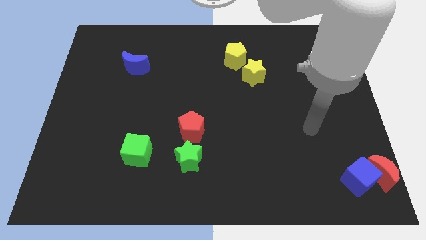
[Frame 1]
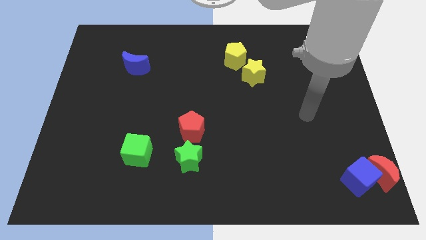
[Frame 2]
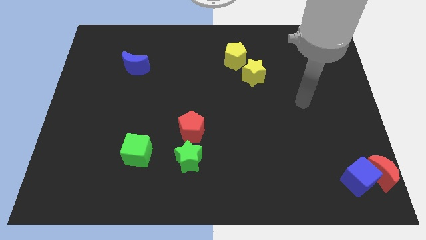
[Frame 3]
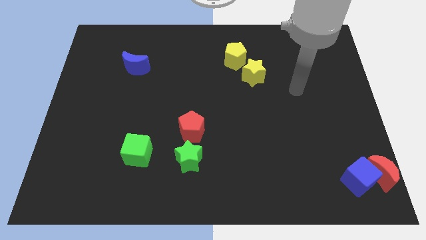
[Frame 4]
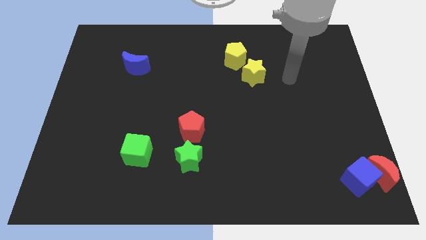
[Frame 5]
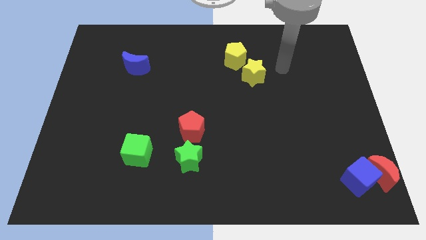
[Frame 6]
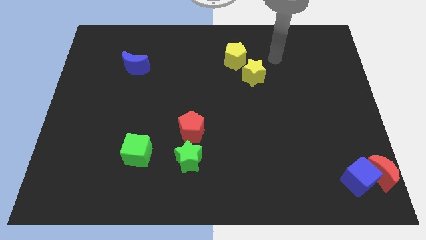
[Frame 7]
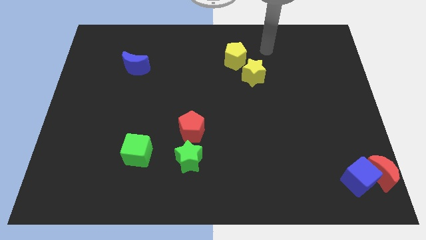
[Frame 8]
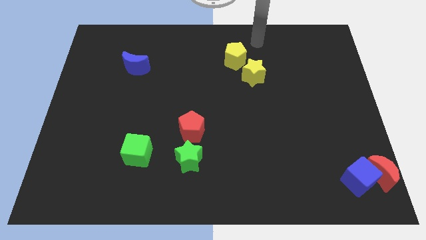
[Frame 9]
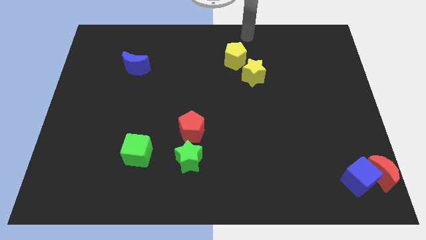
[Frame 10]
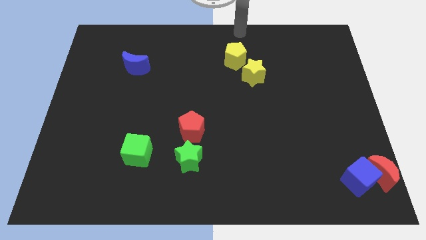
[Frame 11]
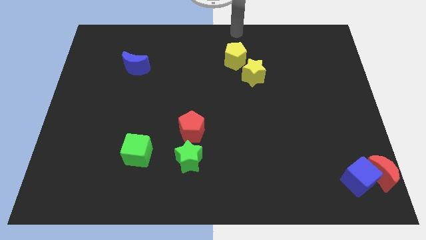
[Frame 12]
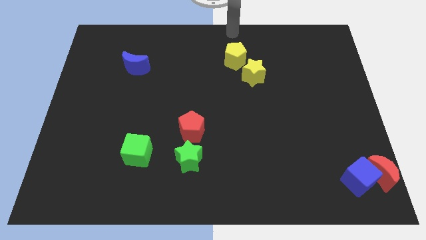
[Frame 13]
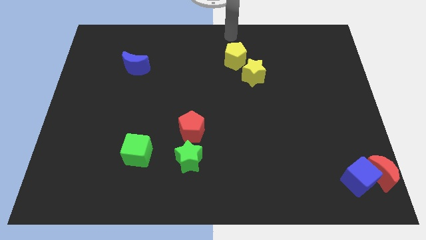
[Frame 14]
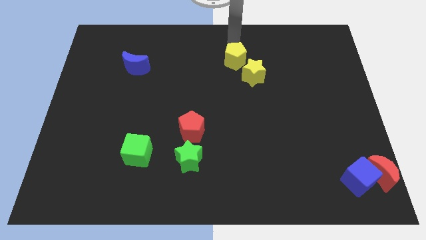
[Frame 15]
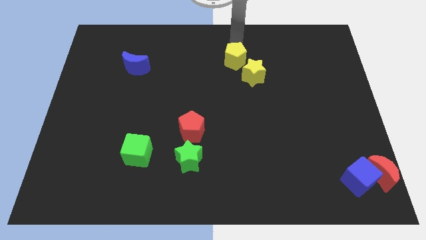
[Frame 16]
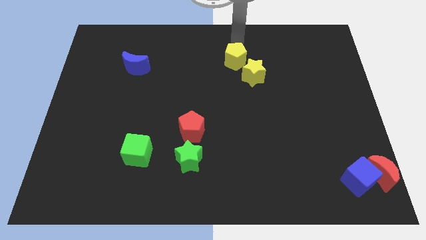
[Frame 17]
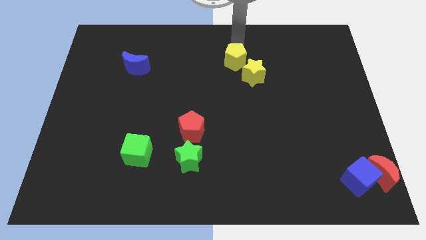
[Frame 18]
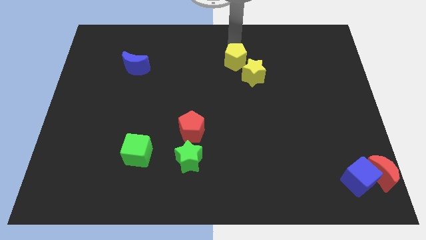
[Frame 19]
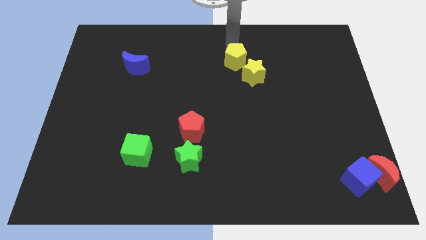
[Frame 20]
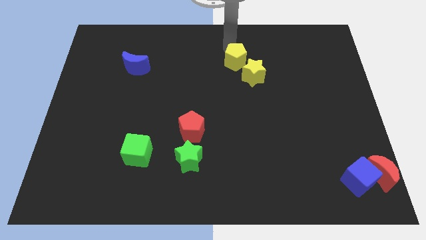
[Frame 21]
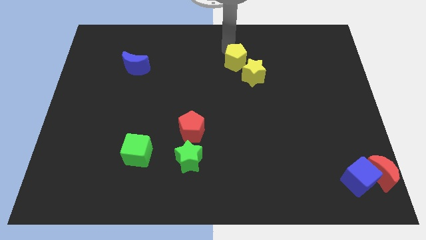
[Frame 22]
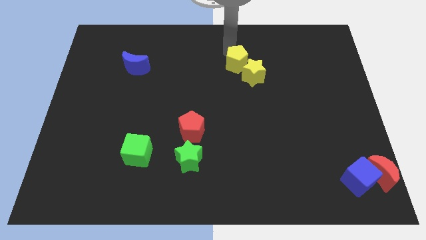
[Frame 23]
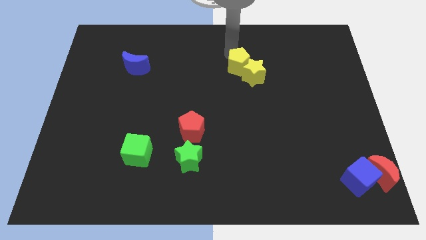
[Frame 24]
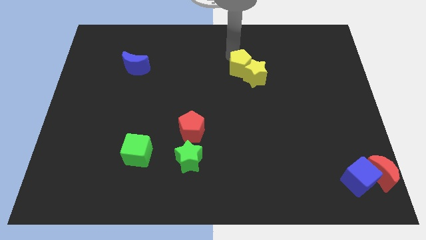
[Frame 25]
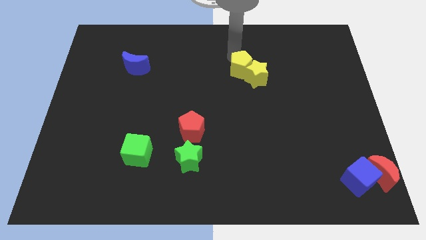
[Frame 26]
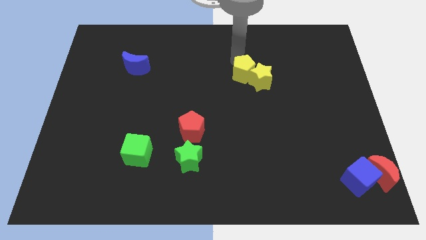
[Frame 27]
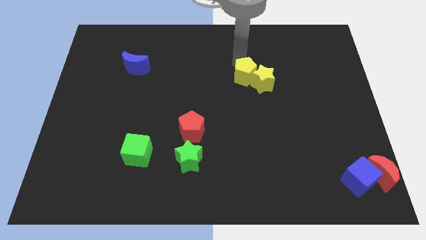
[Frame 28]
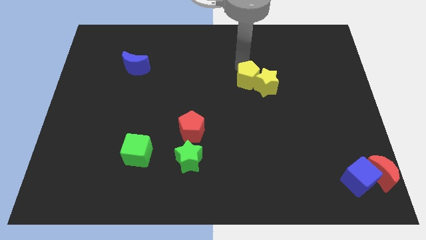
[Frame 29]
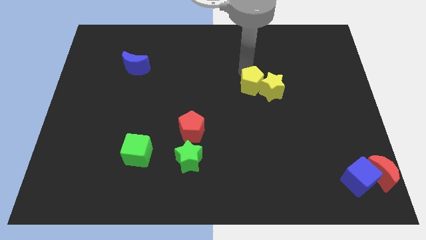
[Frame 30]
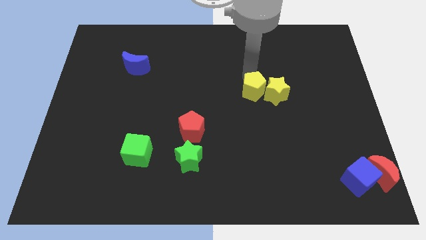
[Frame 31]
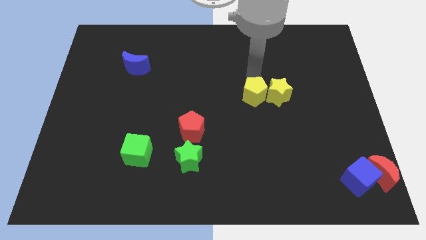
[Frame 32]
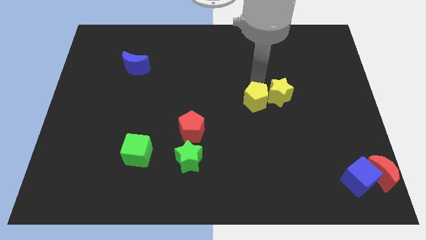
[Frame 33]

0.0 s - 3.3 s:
move both yellow pentagon and yellow star towards down

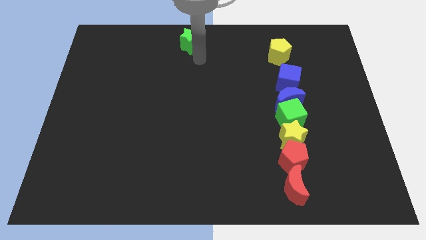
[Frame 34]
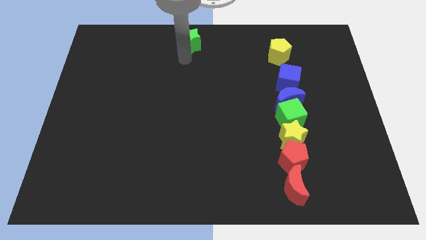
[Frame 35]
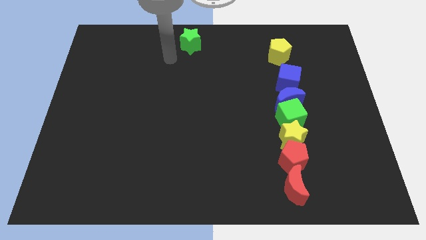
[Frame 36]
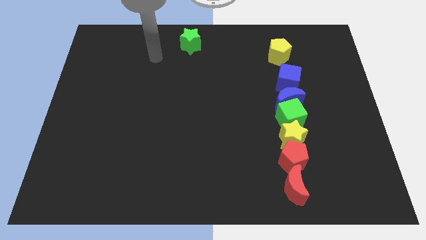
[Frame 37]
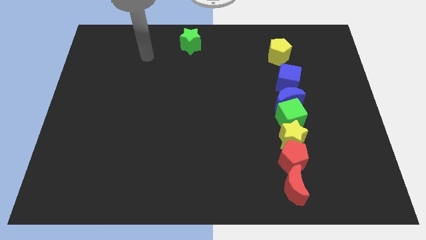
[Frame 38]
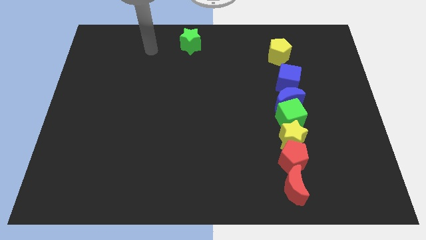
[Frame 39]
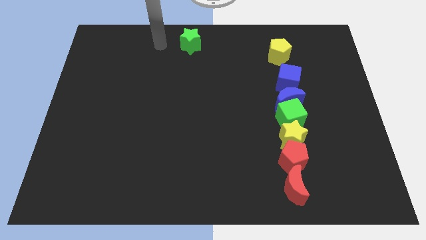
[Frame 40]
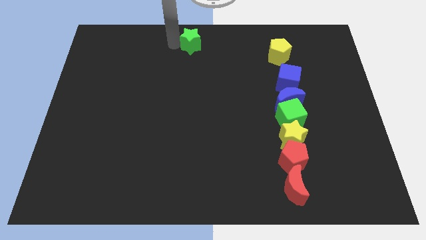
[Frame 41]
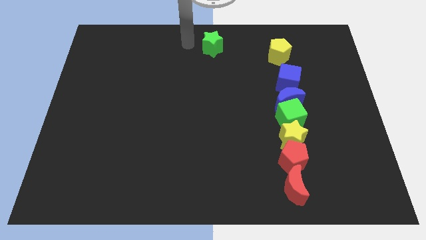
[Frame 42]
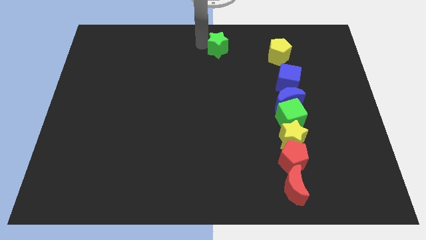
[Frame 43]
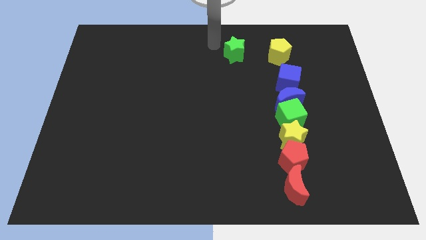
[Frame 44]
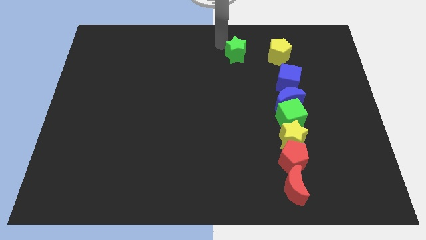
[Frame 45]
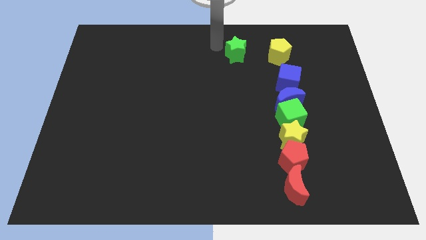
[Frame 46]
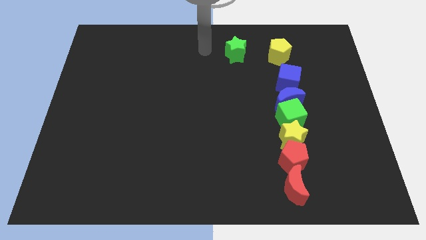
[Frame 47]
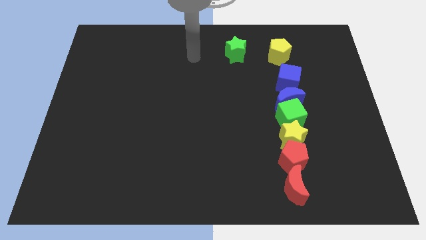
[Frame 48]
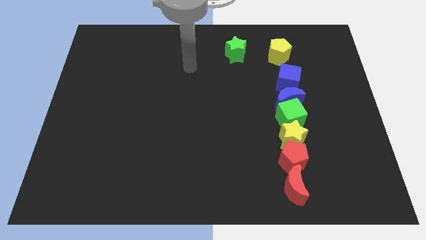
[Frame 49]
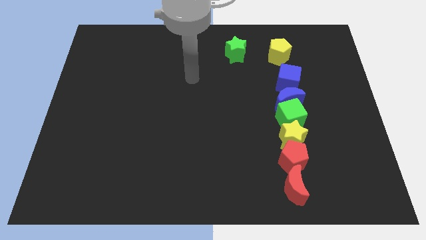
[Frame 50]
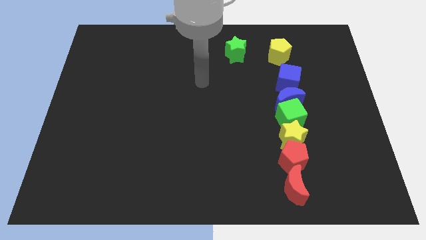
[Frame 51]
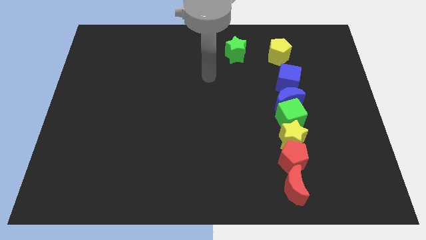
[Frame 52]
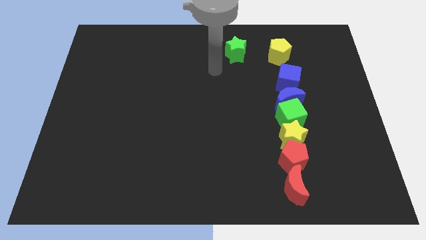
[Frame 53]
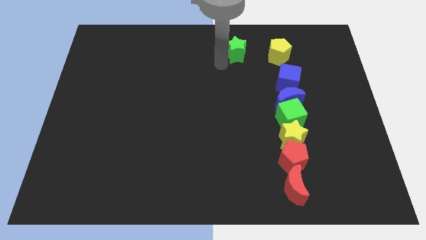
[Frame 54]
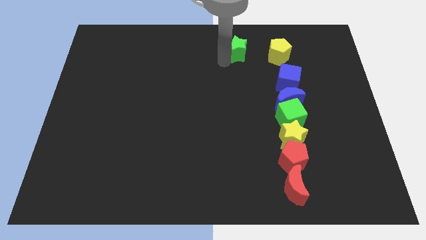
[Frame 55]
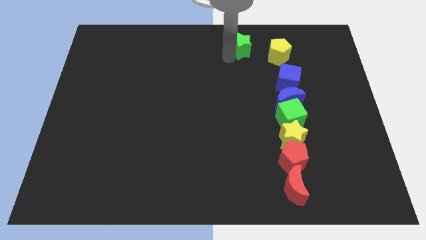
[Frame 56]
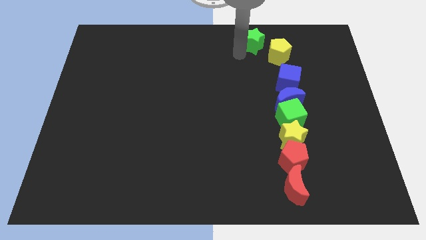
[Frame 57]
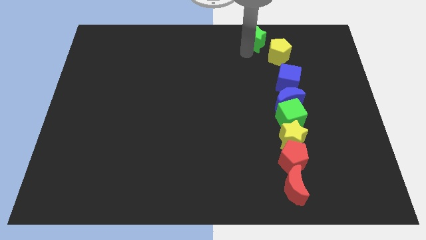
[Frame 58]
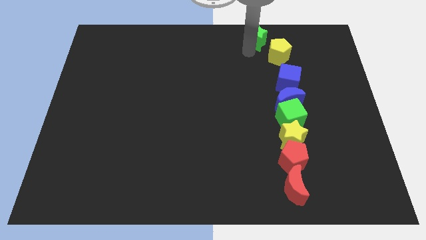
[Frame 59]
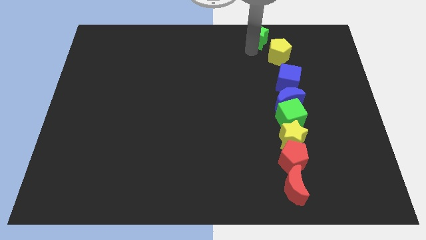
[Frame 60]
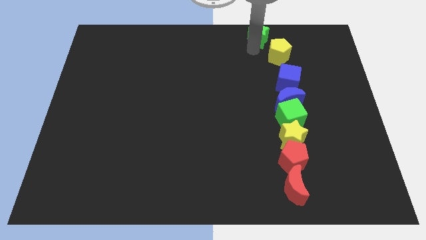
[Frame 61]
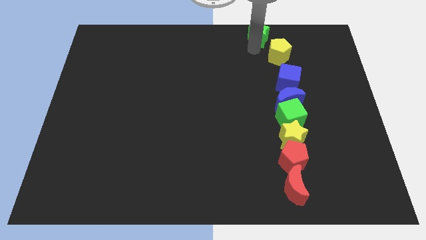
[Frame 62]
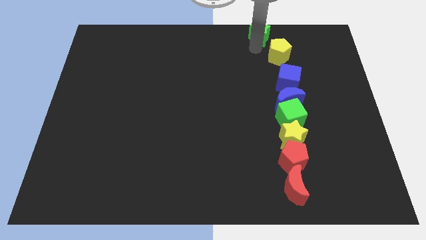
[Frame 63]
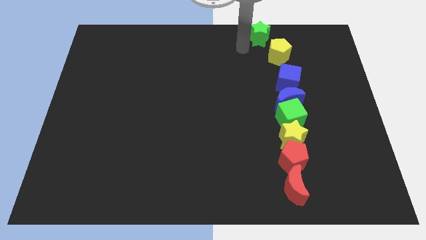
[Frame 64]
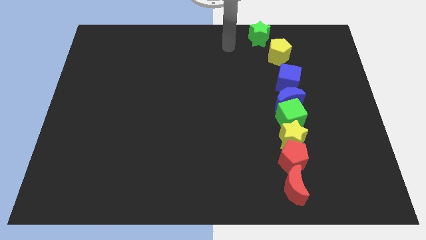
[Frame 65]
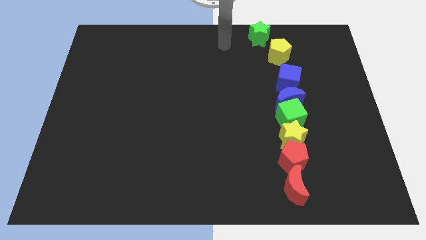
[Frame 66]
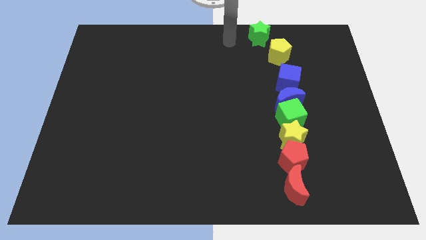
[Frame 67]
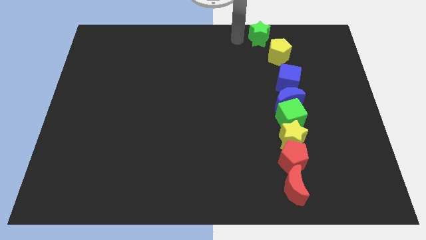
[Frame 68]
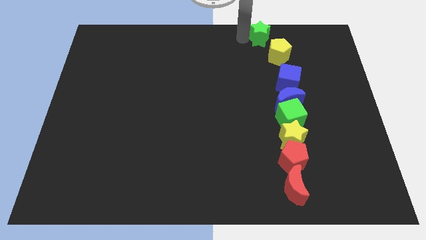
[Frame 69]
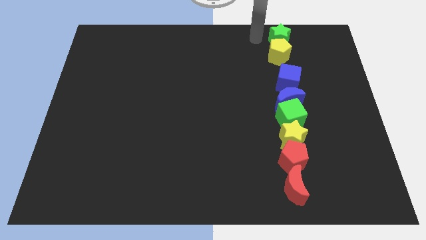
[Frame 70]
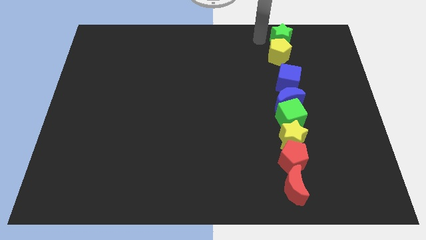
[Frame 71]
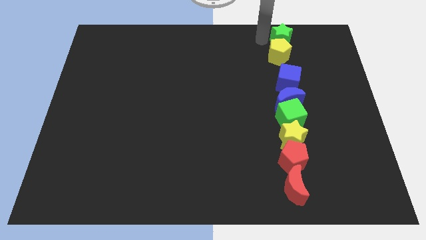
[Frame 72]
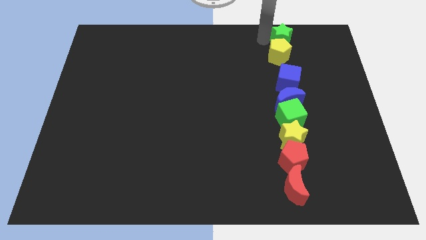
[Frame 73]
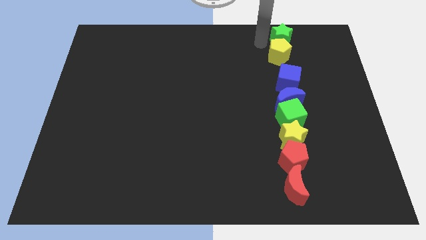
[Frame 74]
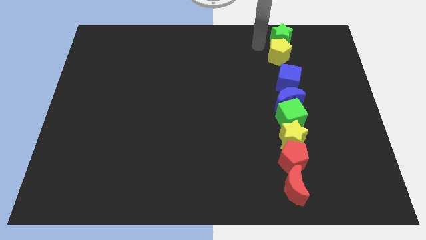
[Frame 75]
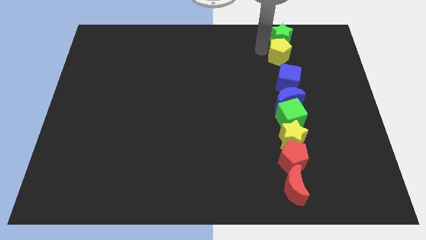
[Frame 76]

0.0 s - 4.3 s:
push the green star at the top of the yellow pentagon

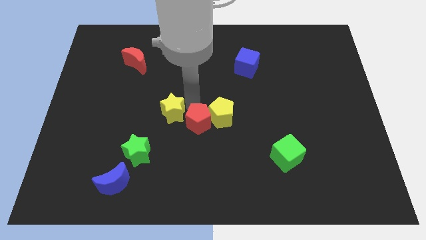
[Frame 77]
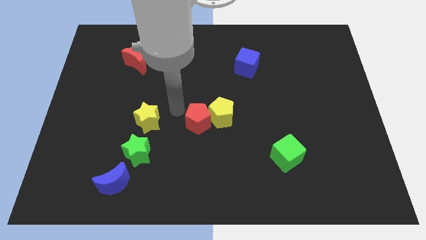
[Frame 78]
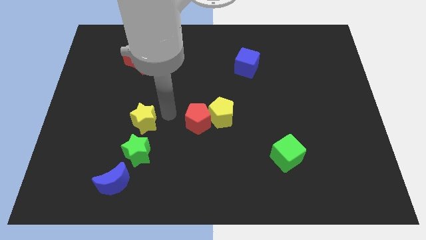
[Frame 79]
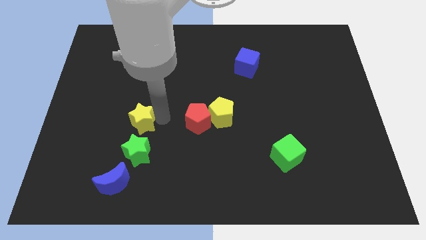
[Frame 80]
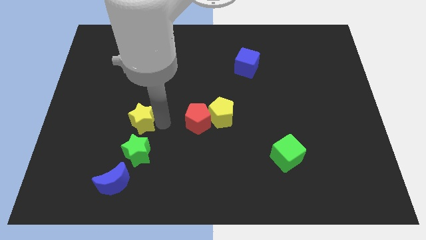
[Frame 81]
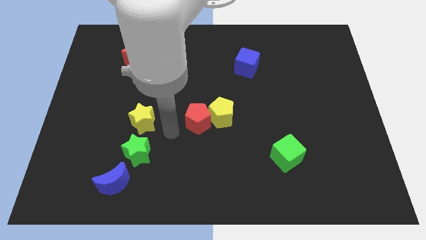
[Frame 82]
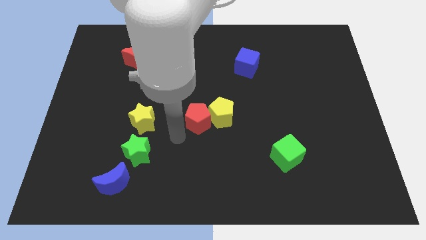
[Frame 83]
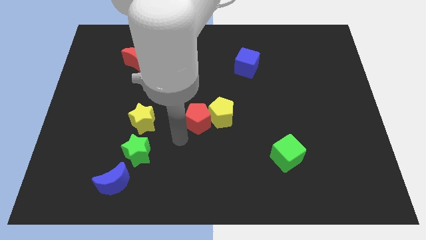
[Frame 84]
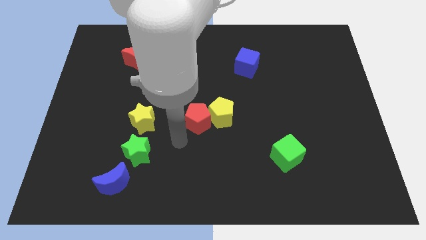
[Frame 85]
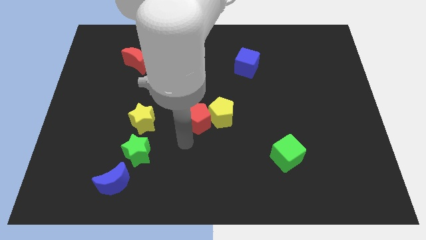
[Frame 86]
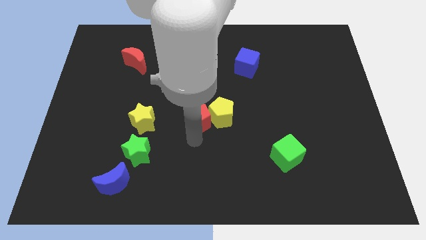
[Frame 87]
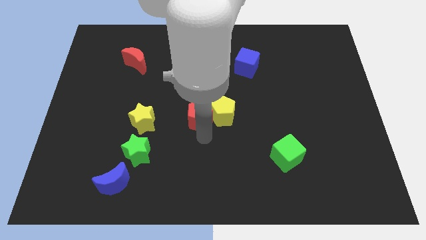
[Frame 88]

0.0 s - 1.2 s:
place the arm down to the red pentagon

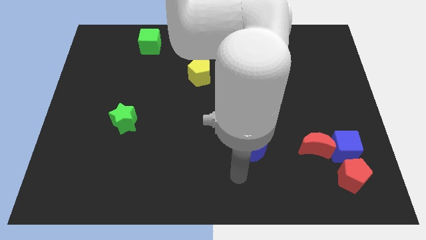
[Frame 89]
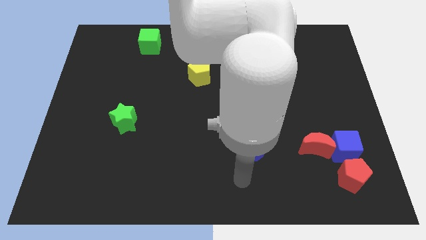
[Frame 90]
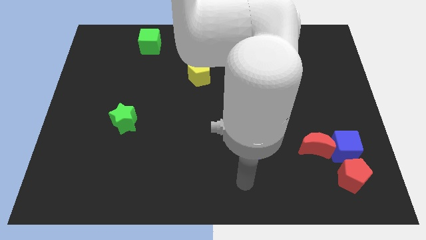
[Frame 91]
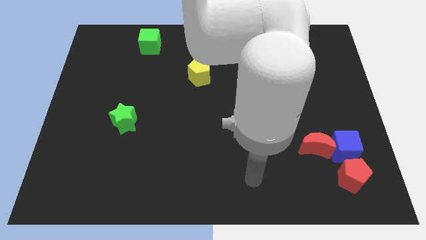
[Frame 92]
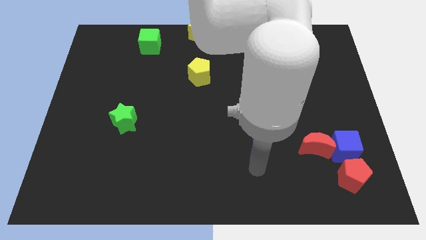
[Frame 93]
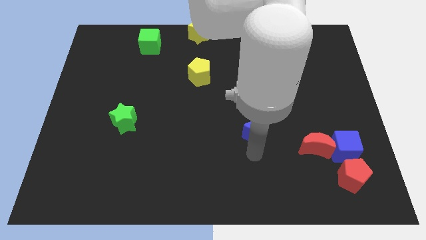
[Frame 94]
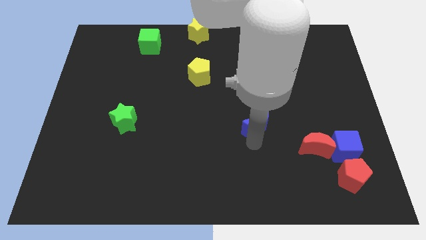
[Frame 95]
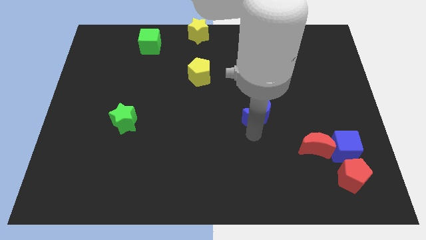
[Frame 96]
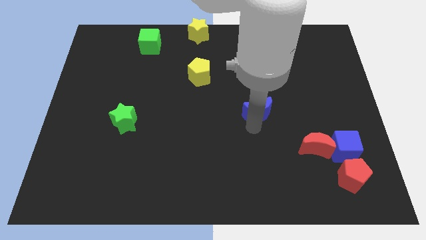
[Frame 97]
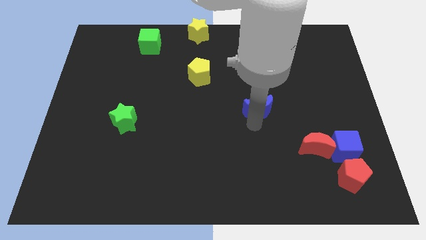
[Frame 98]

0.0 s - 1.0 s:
place the blue moon diagonal to the red moon
